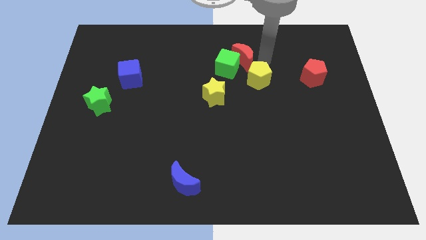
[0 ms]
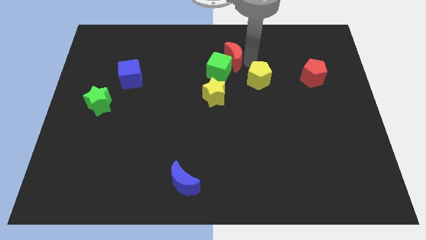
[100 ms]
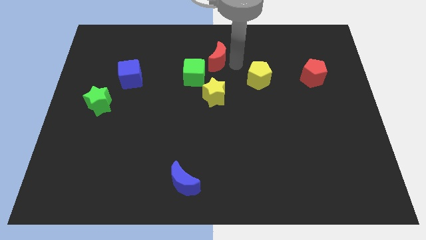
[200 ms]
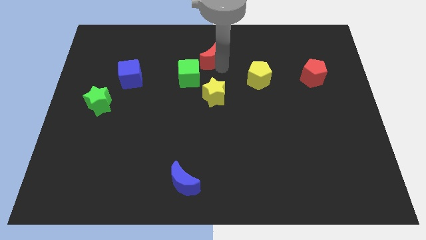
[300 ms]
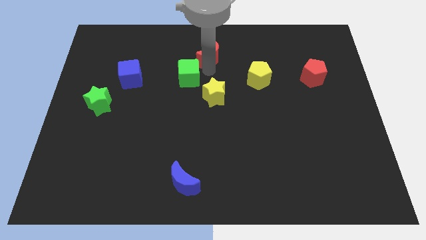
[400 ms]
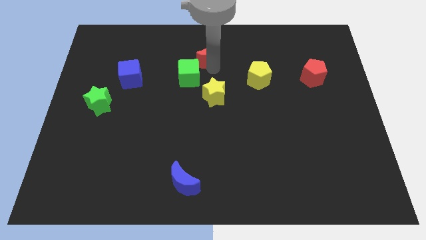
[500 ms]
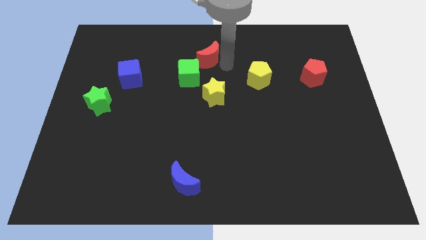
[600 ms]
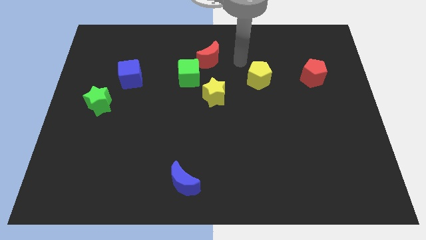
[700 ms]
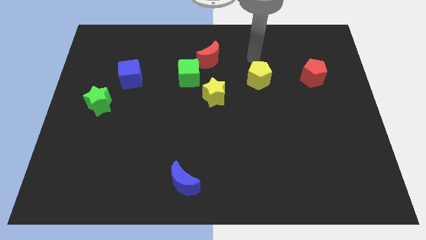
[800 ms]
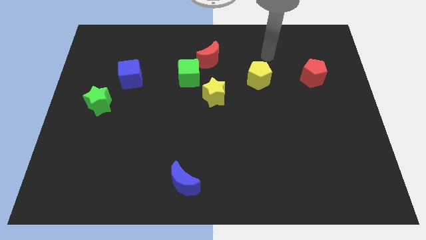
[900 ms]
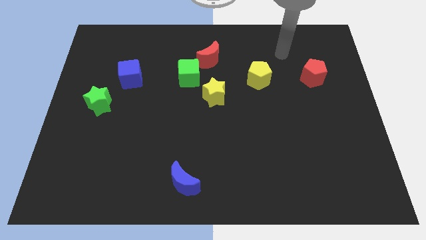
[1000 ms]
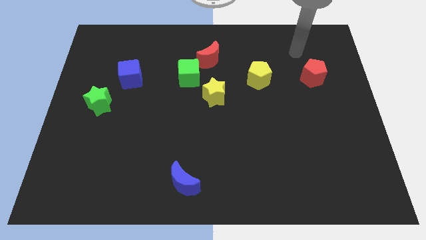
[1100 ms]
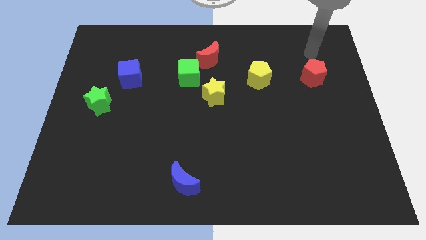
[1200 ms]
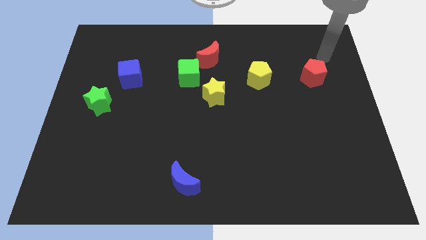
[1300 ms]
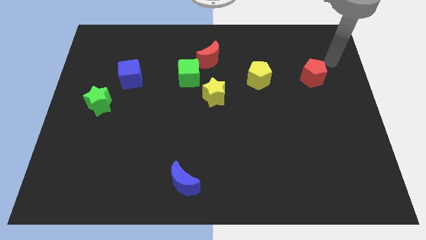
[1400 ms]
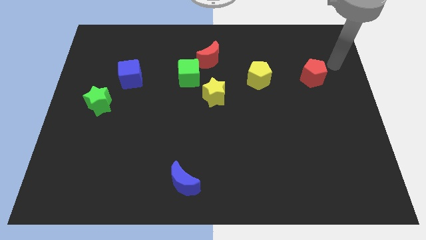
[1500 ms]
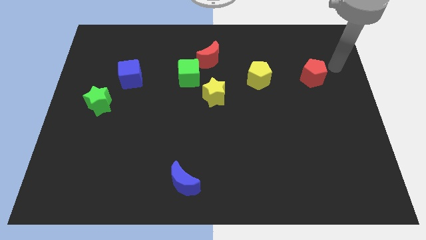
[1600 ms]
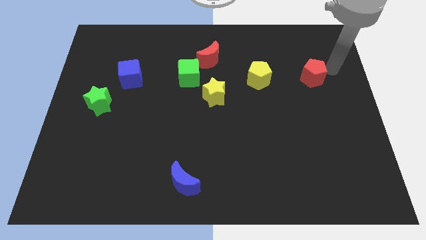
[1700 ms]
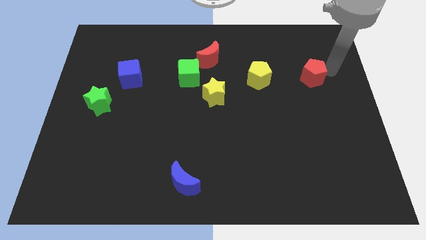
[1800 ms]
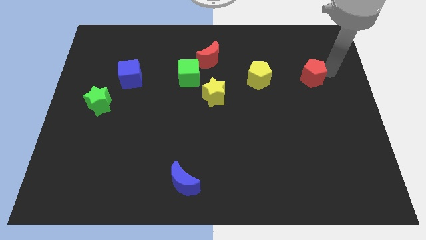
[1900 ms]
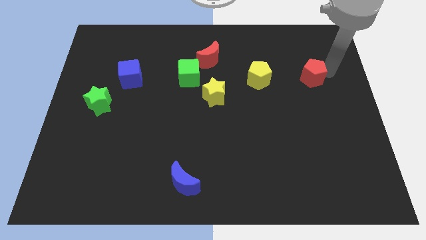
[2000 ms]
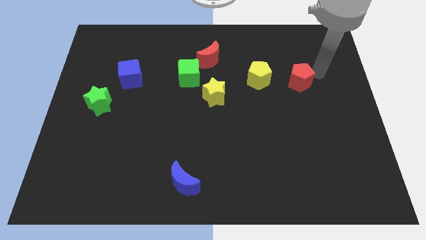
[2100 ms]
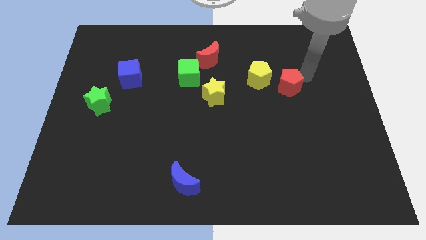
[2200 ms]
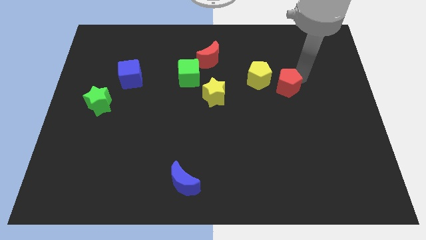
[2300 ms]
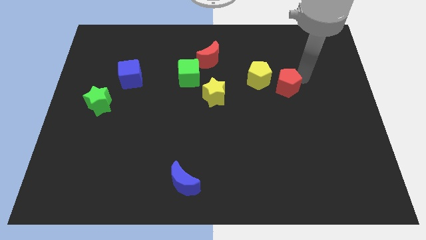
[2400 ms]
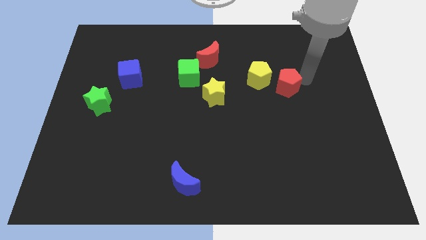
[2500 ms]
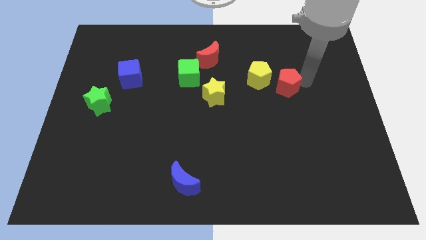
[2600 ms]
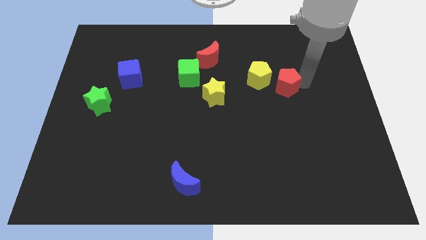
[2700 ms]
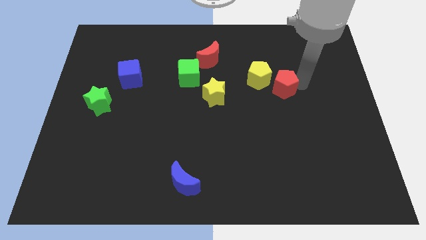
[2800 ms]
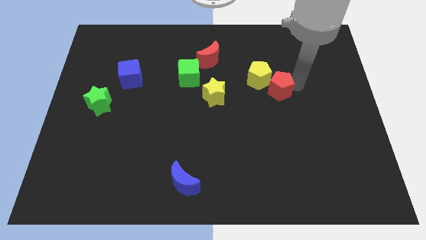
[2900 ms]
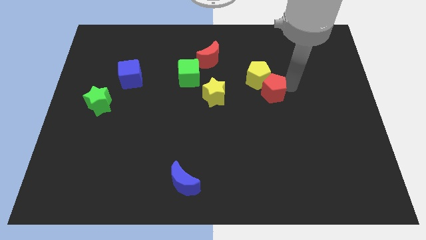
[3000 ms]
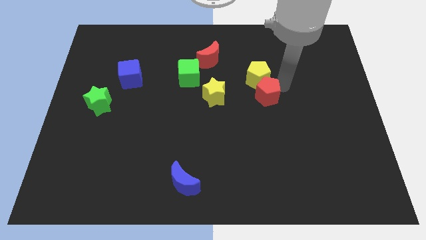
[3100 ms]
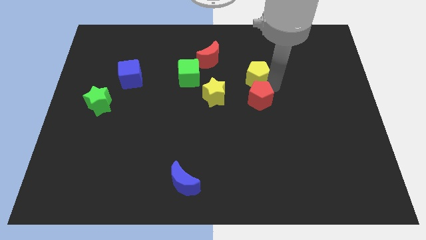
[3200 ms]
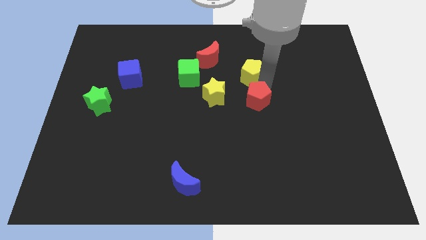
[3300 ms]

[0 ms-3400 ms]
move red pentagon to the bottom of yellow pentagon

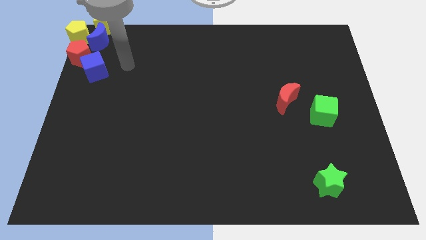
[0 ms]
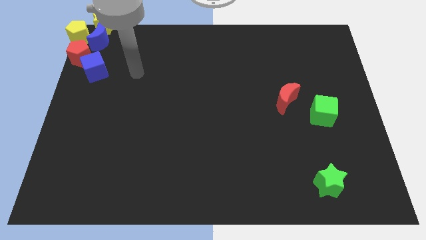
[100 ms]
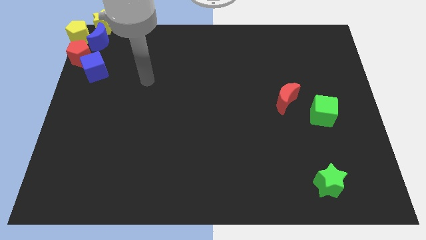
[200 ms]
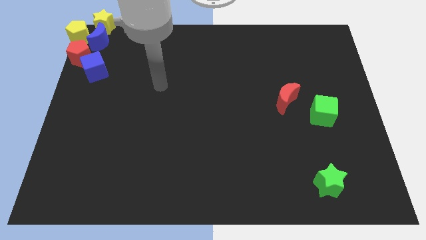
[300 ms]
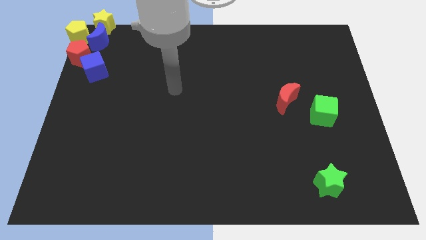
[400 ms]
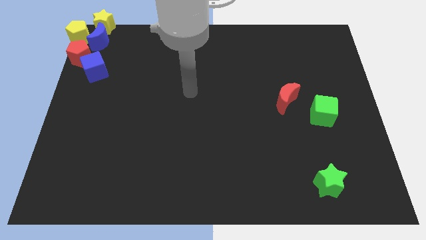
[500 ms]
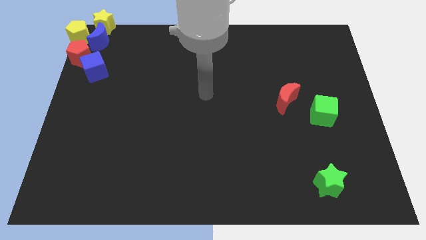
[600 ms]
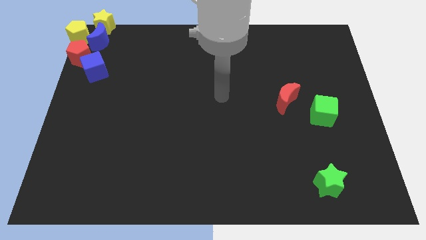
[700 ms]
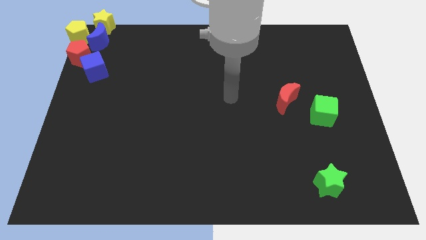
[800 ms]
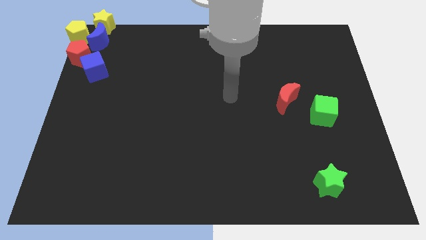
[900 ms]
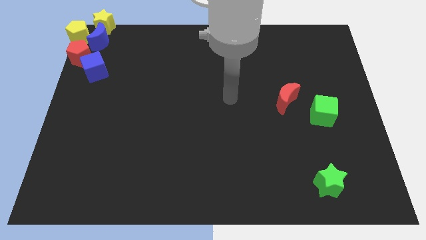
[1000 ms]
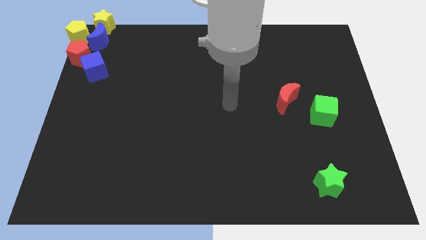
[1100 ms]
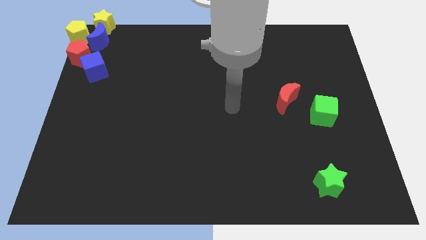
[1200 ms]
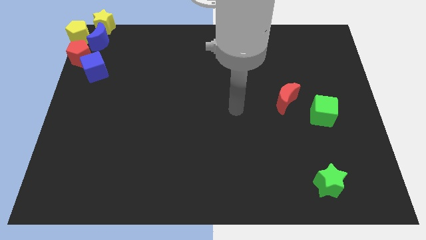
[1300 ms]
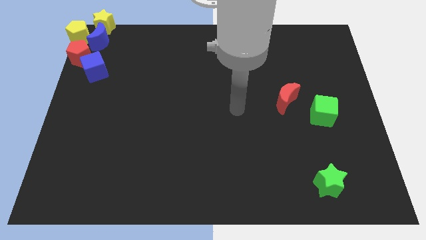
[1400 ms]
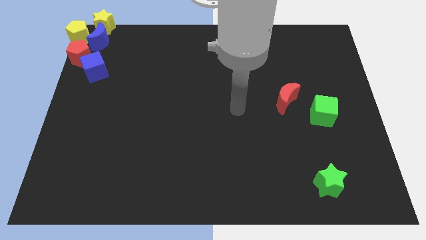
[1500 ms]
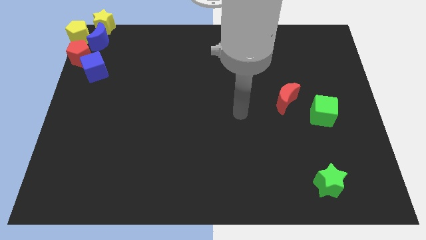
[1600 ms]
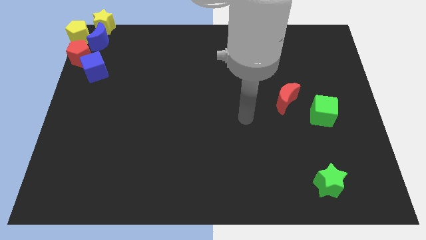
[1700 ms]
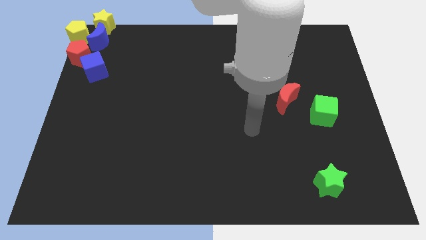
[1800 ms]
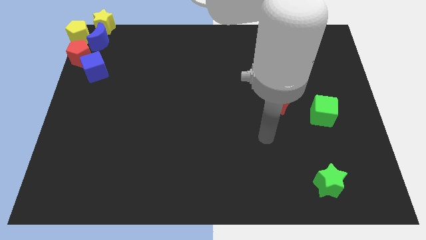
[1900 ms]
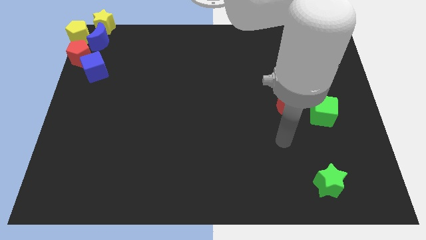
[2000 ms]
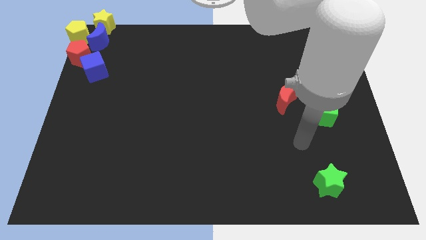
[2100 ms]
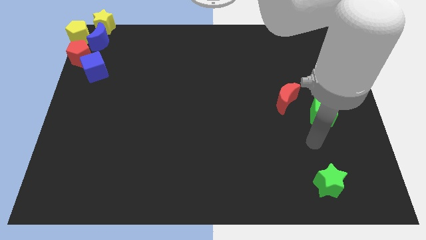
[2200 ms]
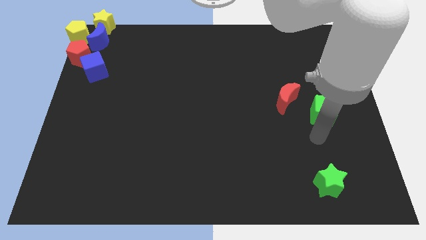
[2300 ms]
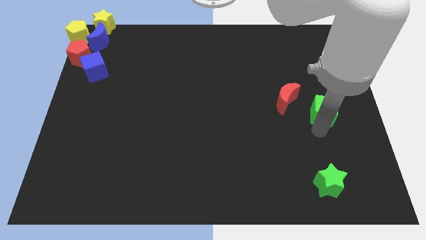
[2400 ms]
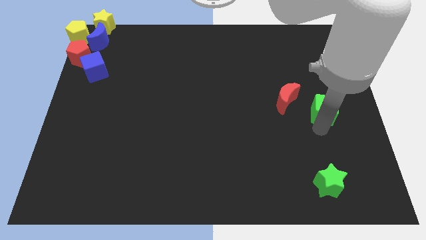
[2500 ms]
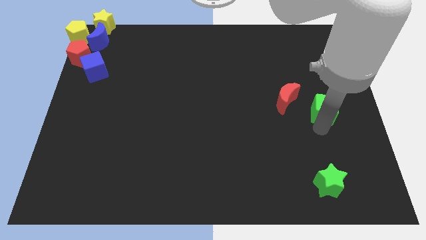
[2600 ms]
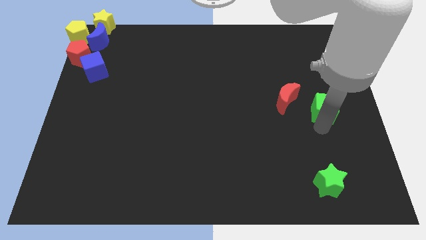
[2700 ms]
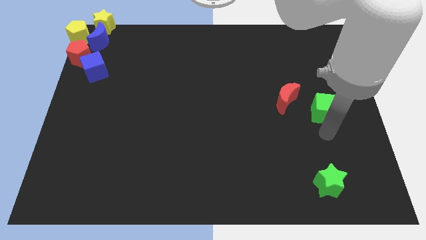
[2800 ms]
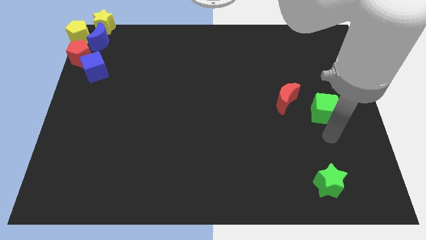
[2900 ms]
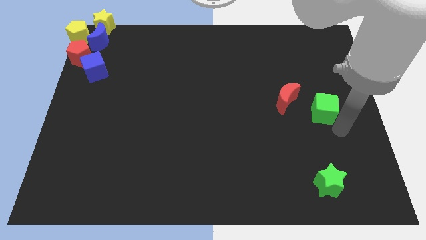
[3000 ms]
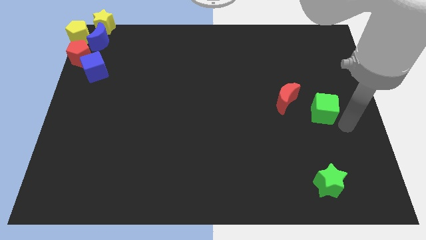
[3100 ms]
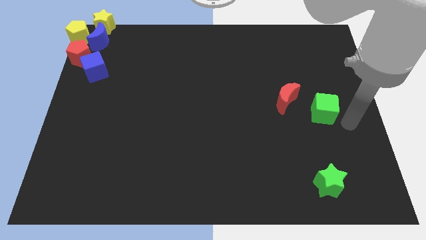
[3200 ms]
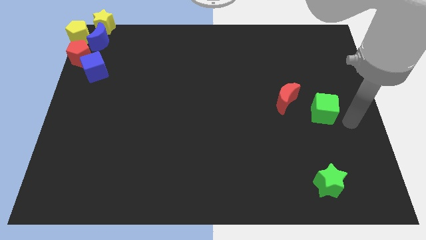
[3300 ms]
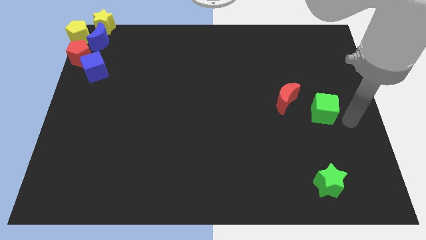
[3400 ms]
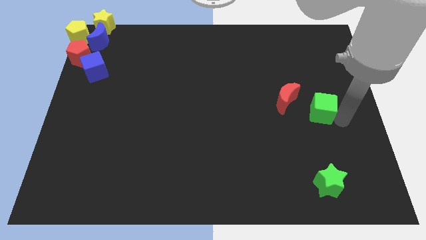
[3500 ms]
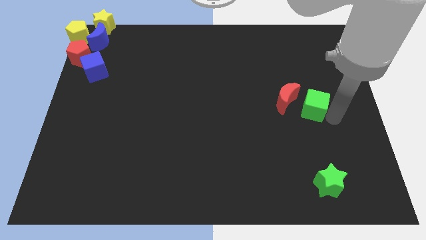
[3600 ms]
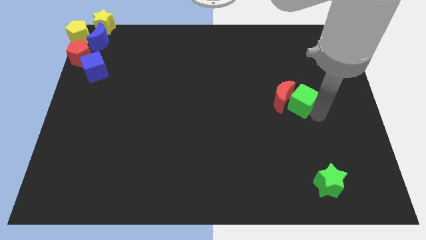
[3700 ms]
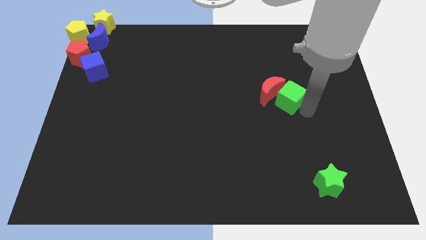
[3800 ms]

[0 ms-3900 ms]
push the green cube to the right of the red crescent

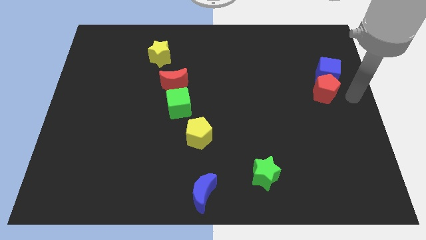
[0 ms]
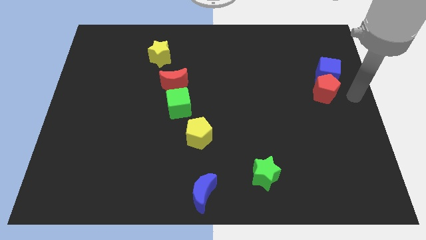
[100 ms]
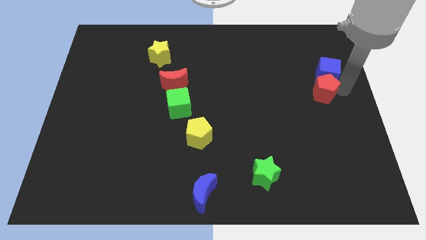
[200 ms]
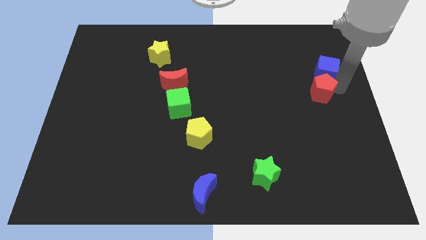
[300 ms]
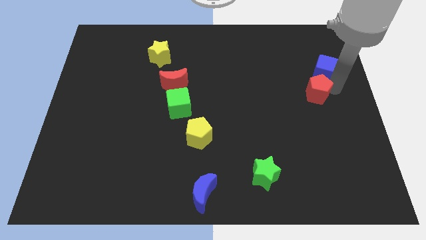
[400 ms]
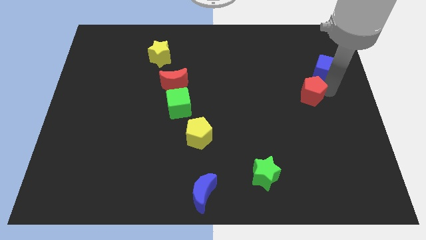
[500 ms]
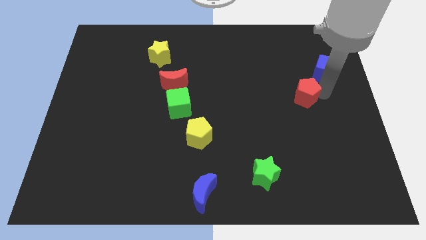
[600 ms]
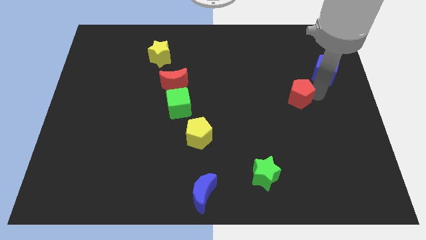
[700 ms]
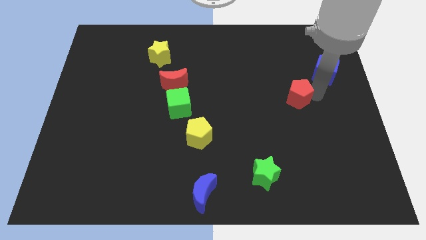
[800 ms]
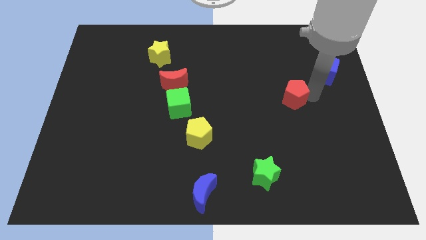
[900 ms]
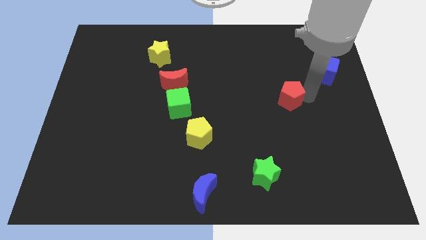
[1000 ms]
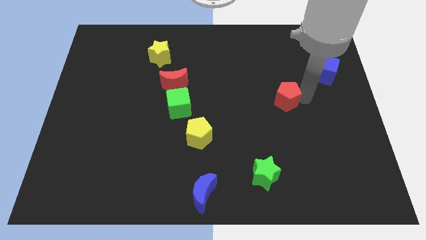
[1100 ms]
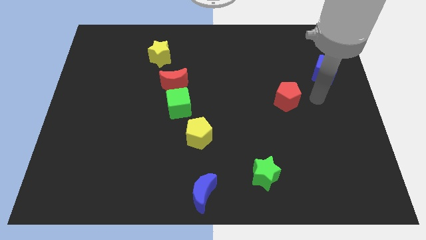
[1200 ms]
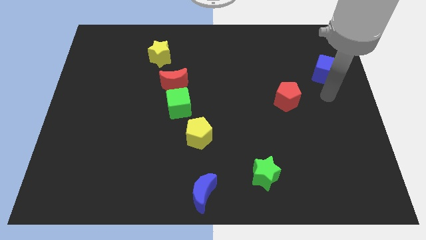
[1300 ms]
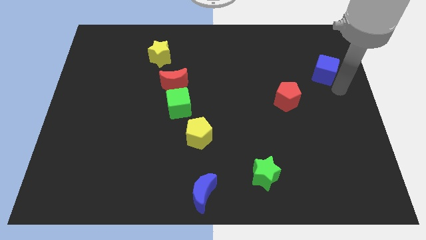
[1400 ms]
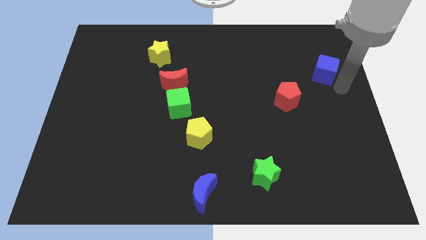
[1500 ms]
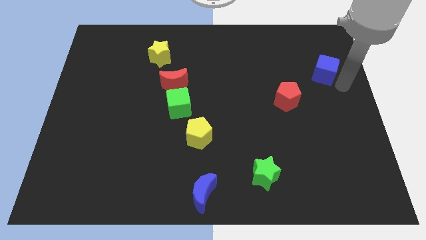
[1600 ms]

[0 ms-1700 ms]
separate the red pentagon from the blue cube
